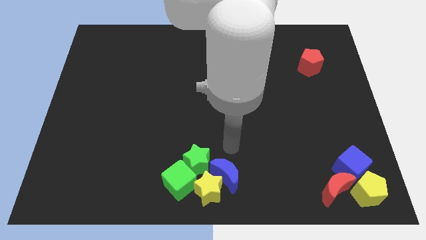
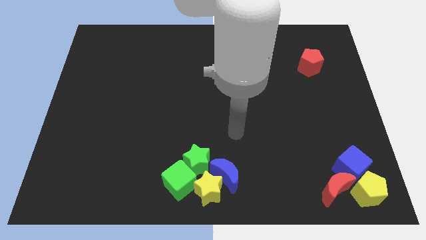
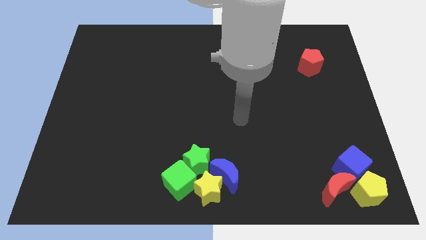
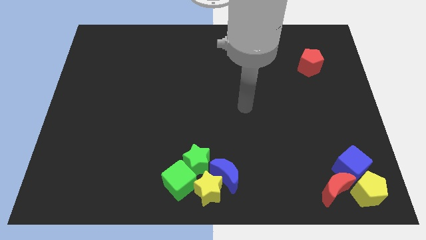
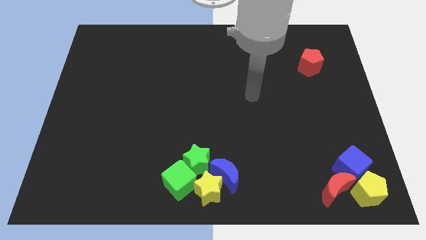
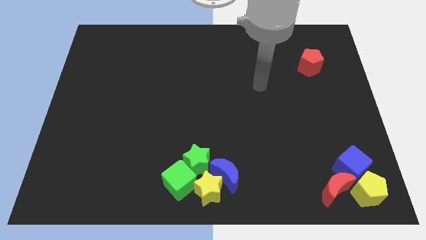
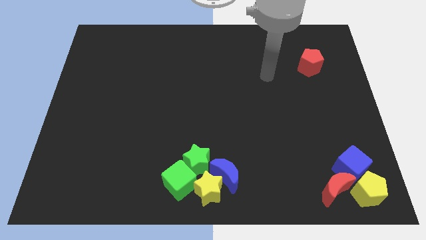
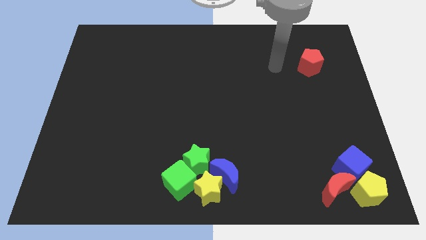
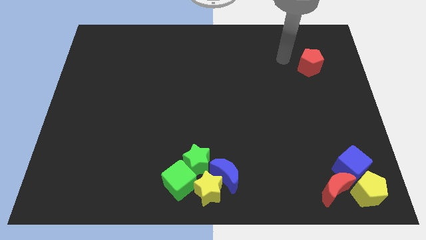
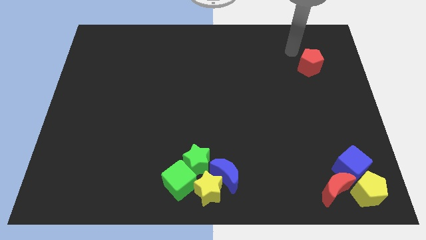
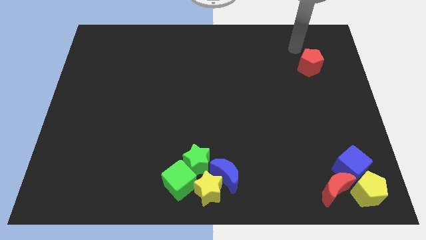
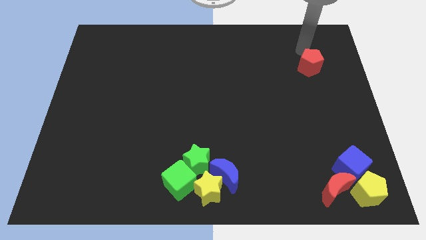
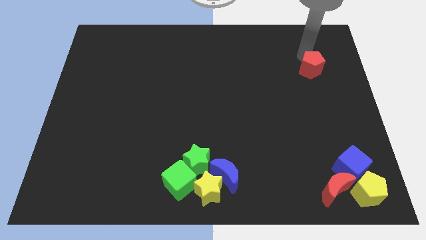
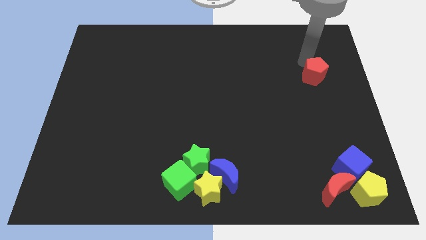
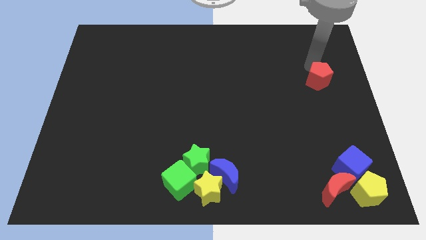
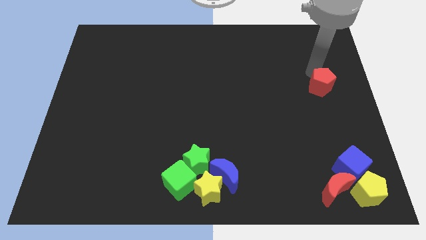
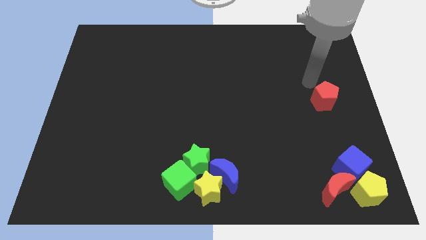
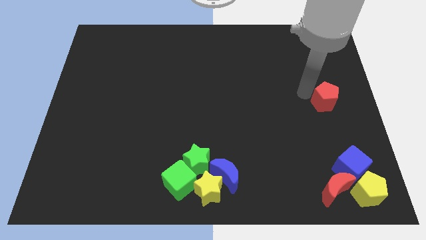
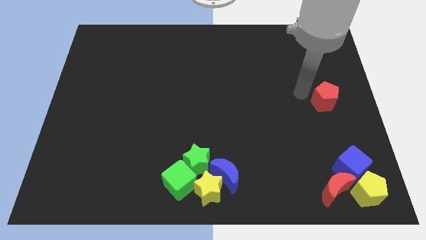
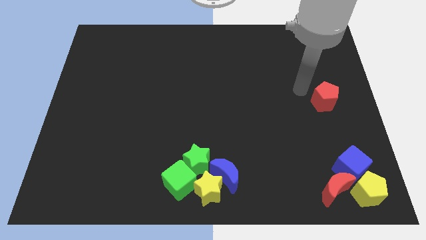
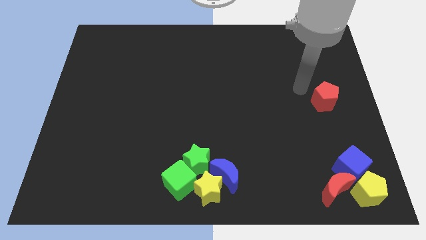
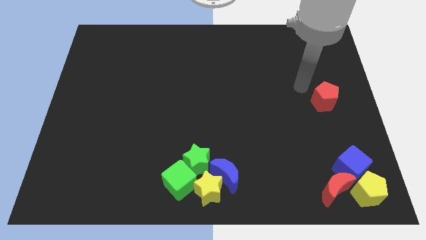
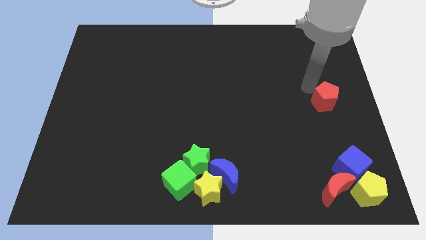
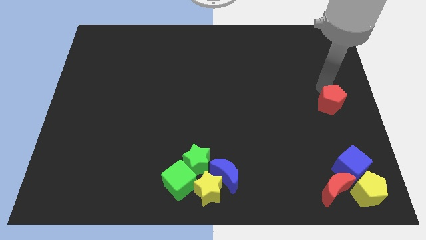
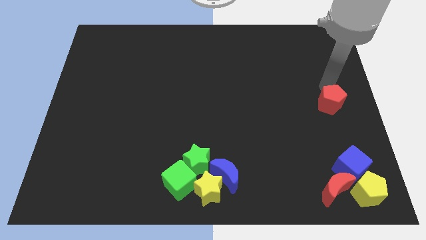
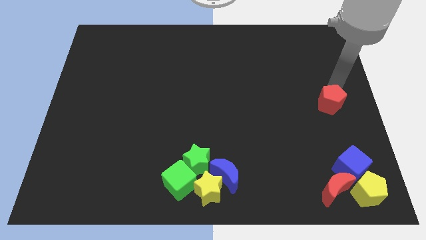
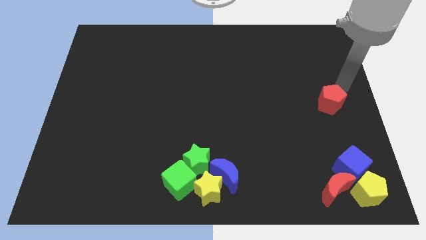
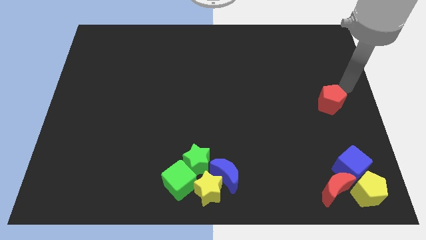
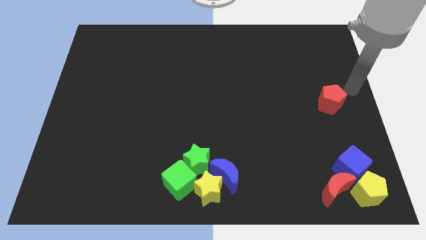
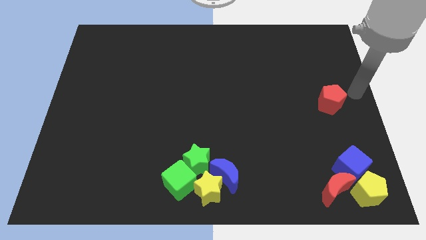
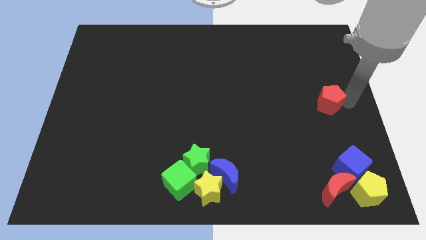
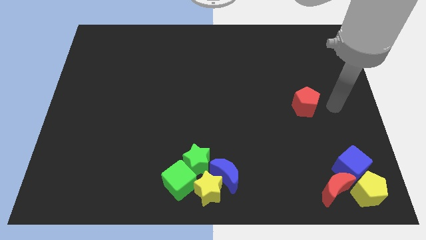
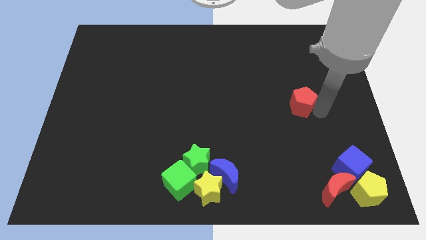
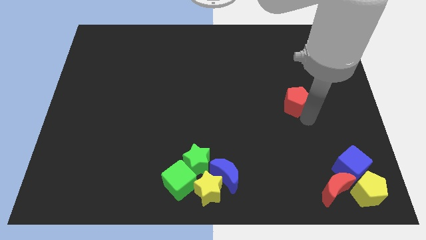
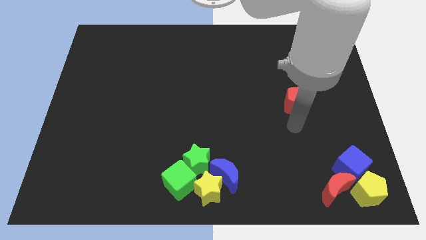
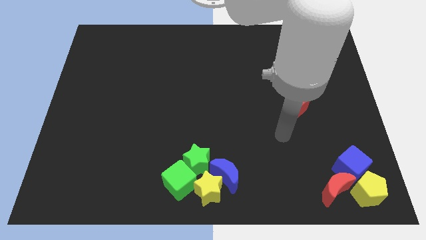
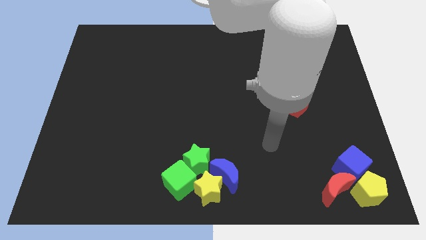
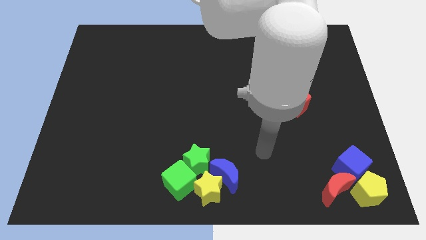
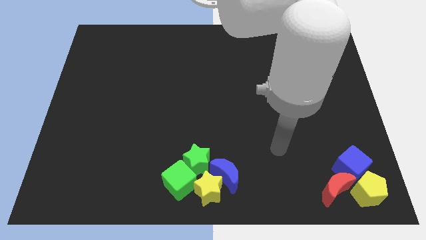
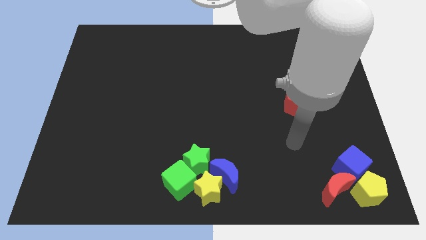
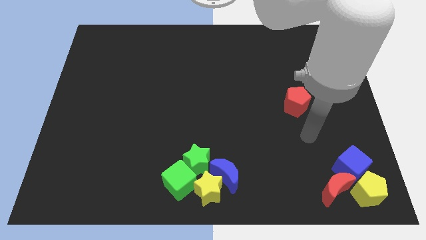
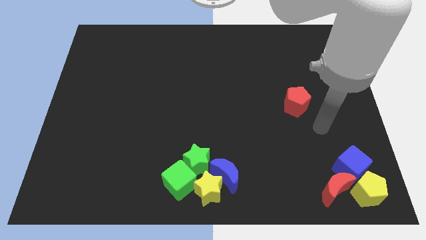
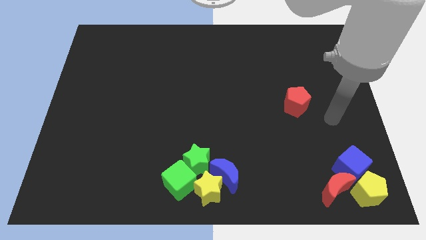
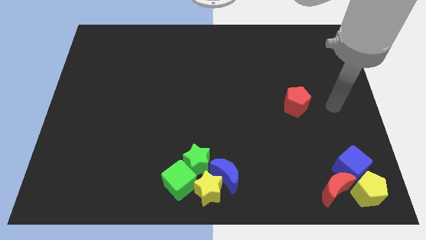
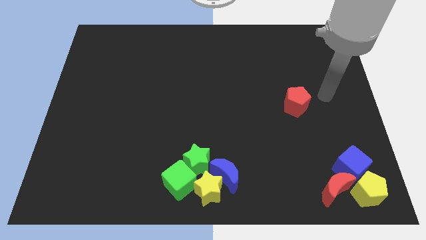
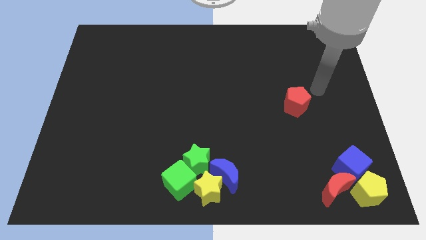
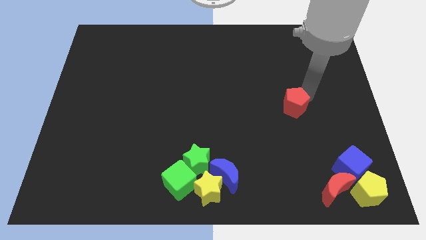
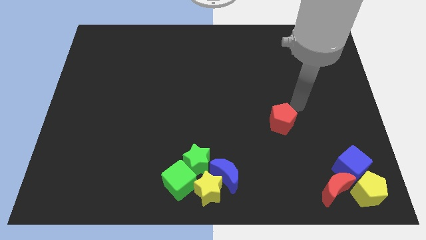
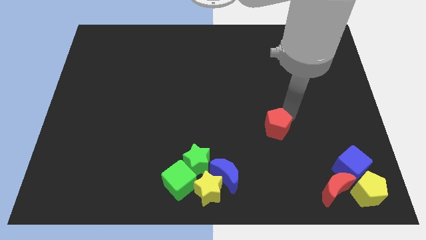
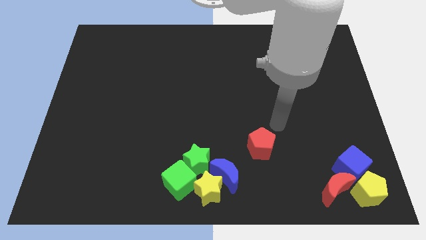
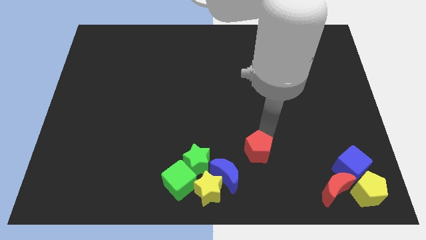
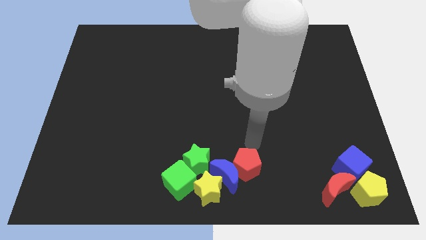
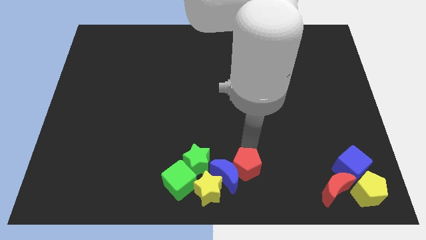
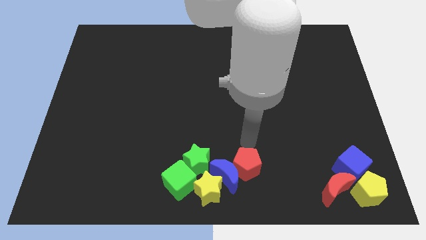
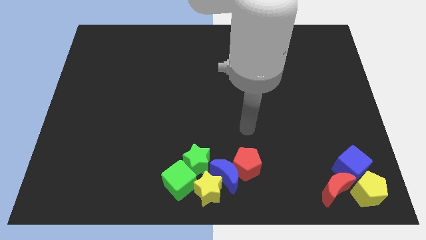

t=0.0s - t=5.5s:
move the red pentagon near to the blue crescent

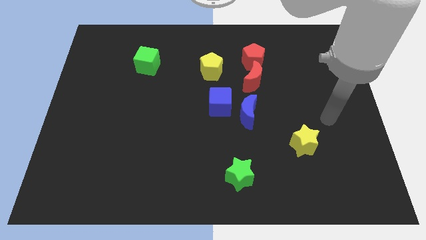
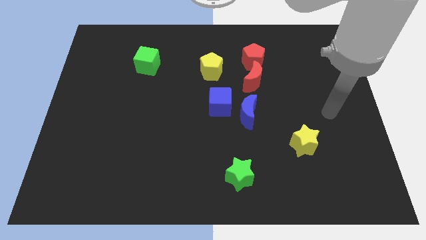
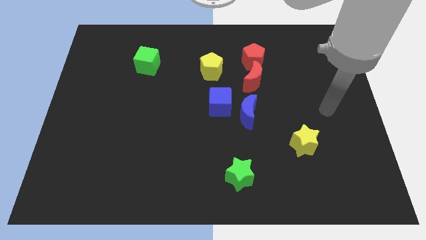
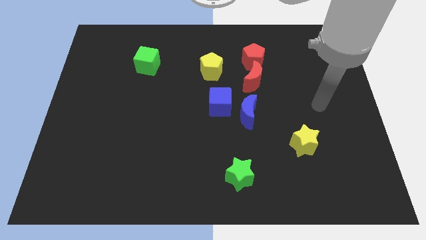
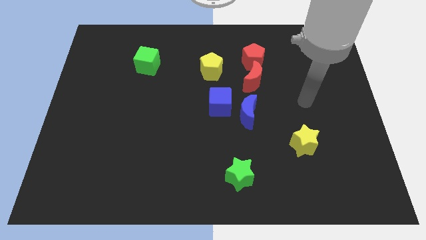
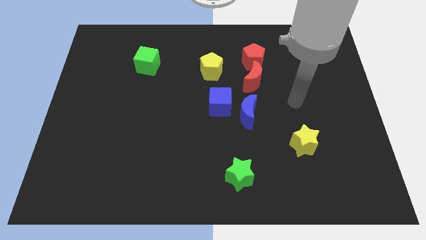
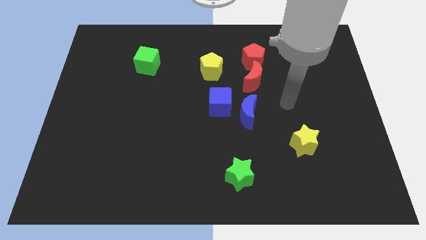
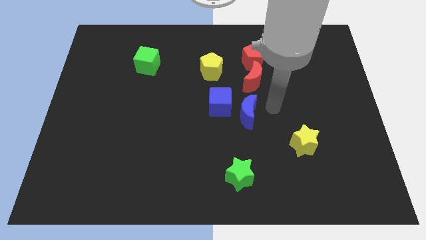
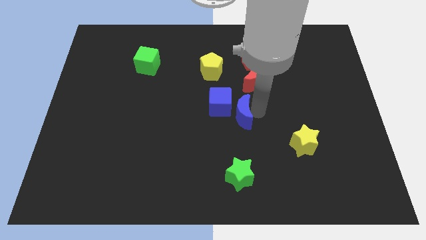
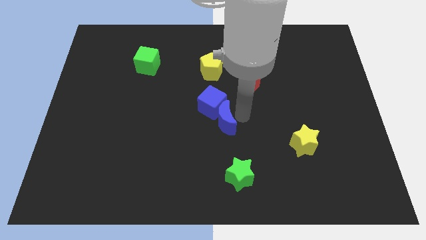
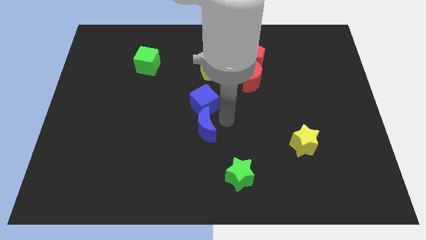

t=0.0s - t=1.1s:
push the blue moon into the blue cube

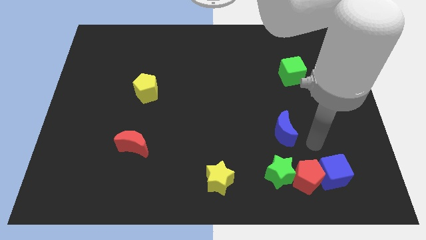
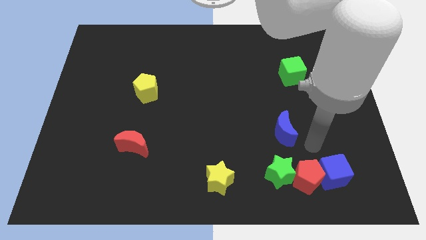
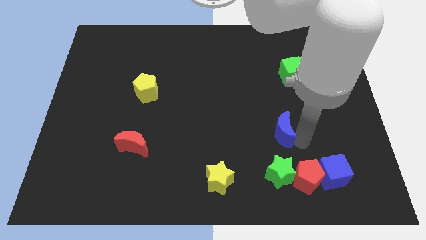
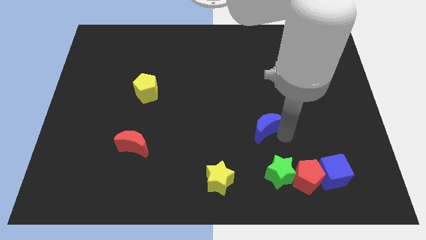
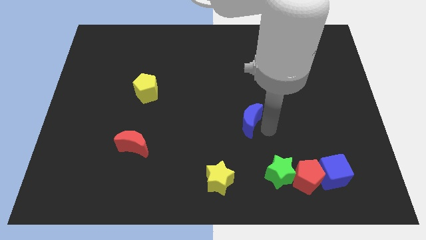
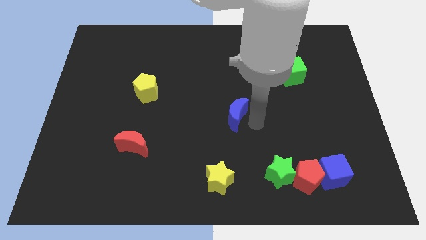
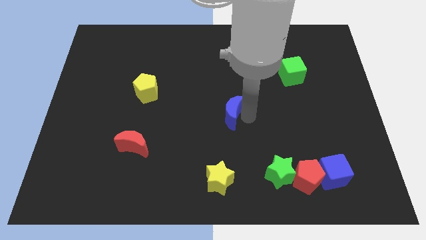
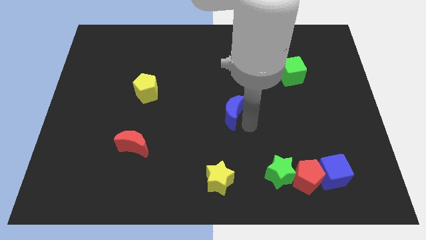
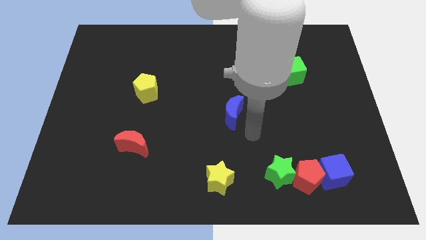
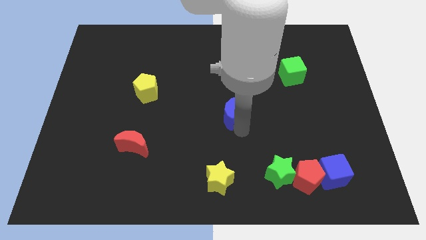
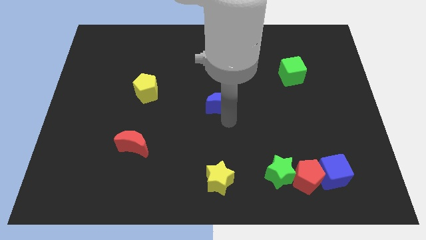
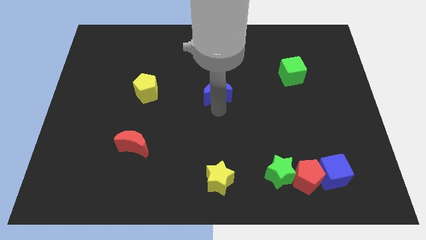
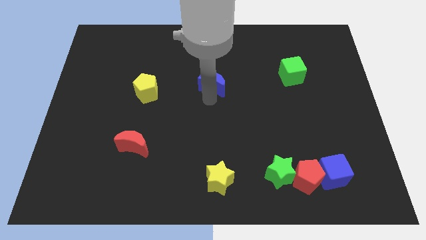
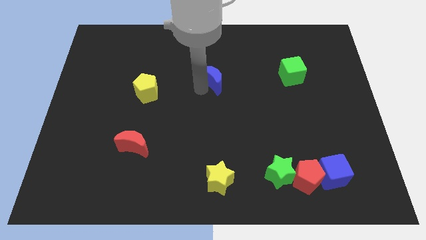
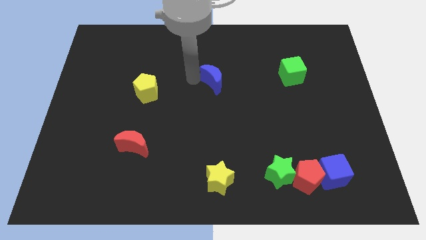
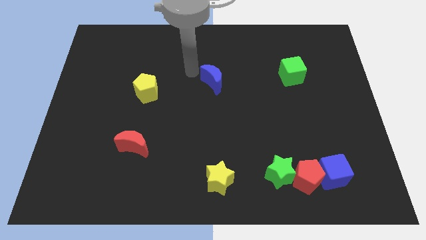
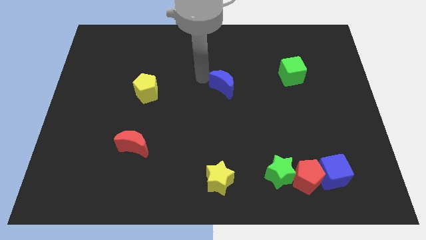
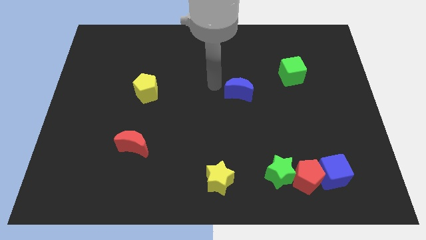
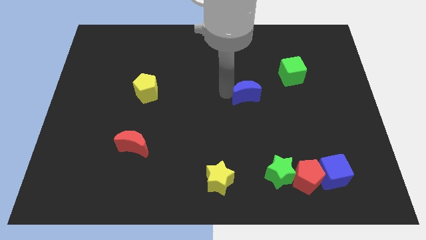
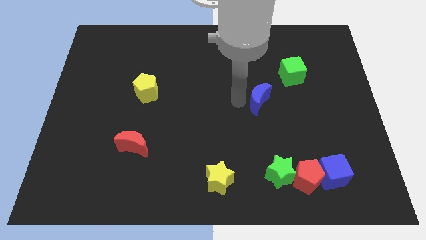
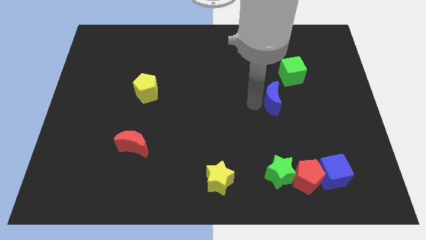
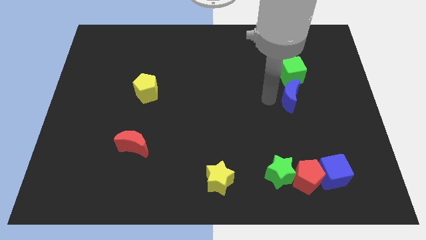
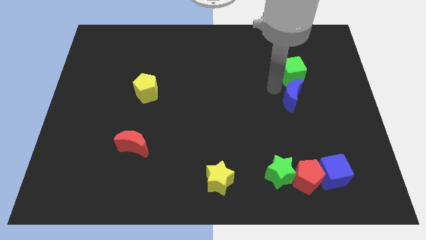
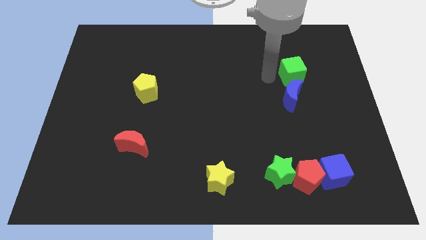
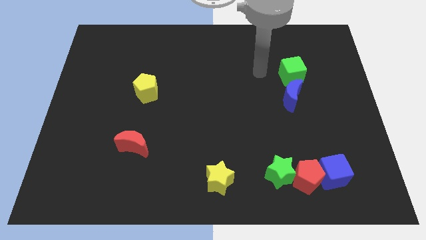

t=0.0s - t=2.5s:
place the blue moon below green cube
